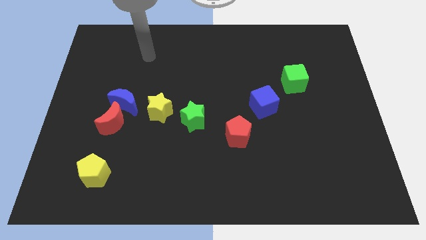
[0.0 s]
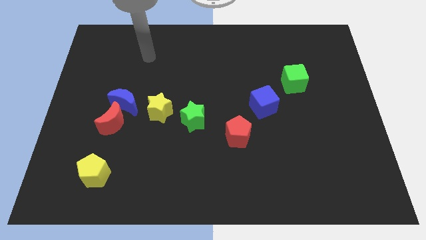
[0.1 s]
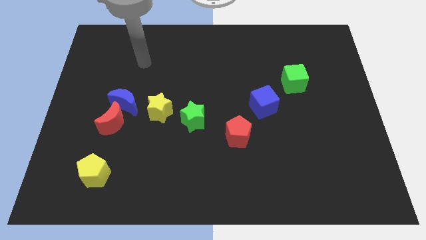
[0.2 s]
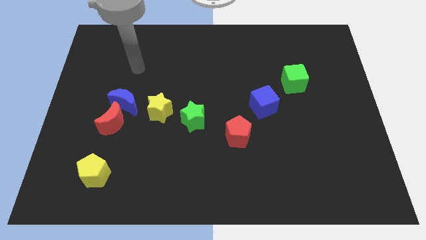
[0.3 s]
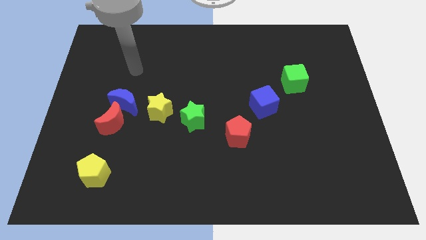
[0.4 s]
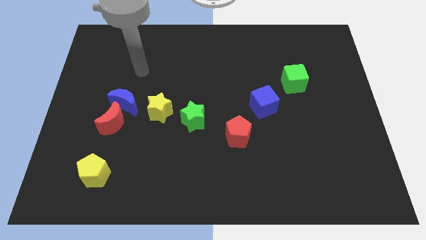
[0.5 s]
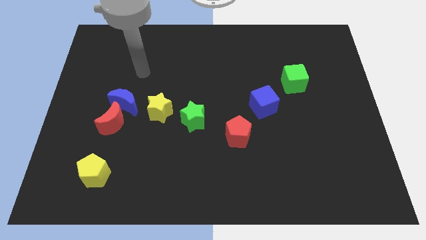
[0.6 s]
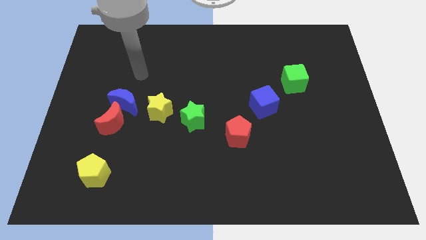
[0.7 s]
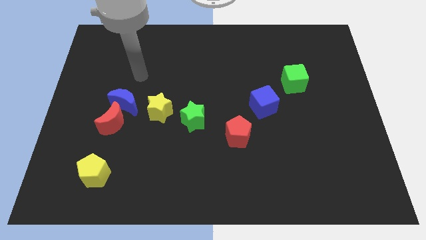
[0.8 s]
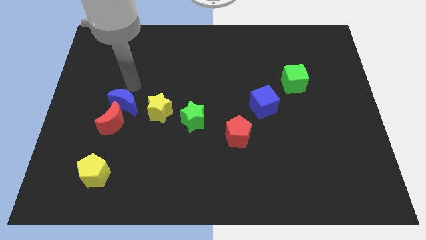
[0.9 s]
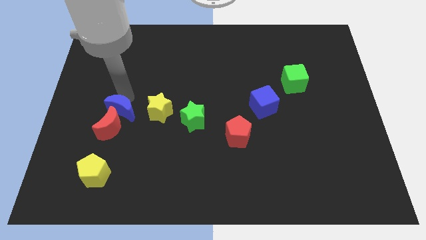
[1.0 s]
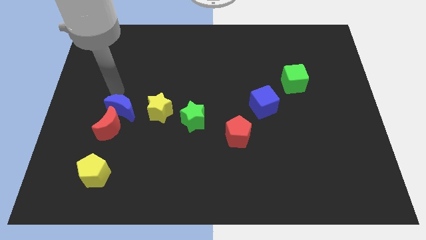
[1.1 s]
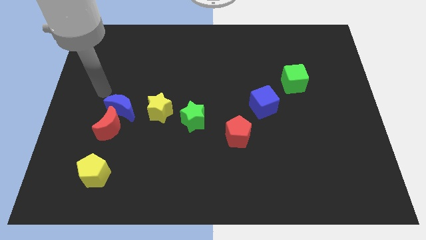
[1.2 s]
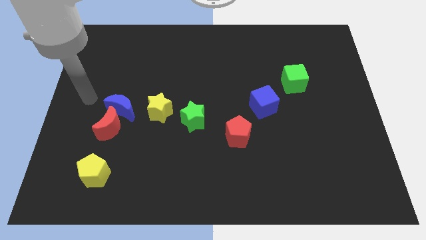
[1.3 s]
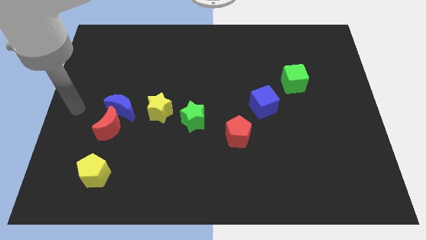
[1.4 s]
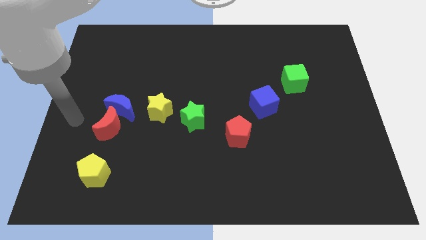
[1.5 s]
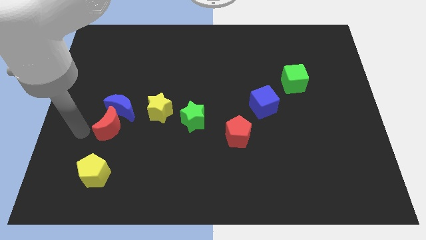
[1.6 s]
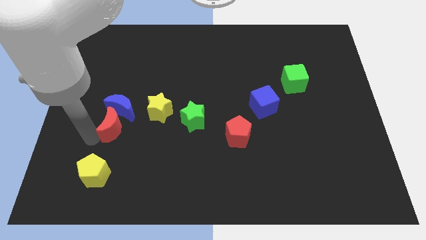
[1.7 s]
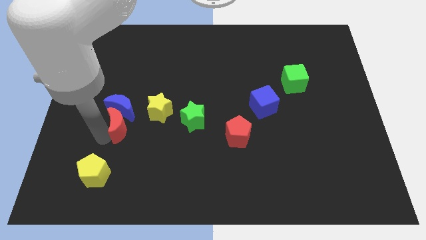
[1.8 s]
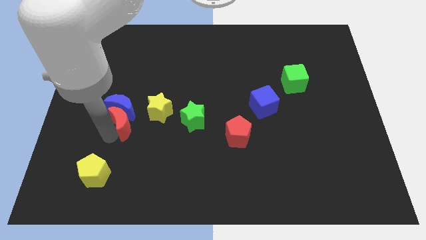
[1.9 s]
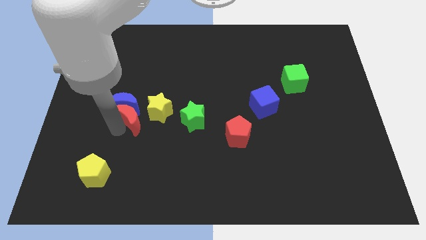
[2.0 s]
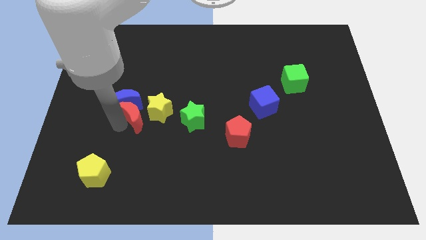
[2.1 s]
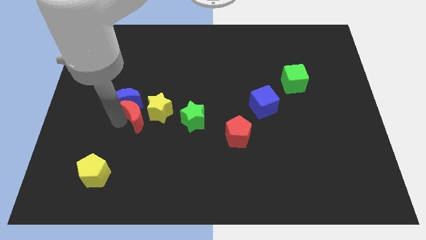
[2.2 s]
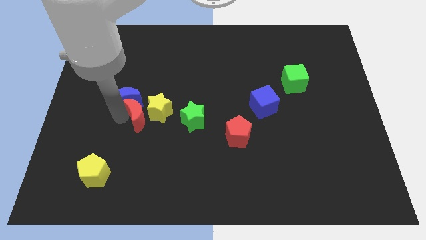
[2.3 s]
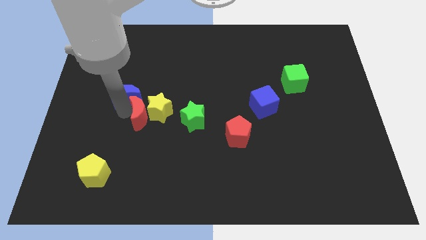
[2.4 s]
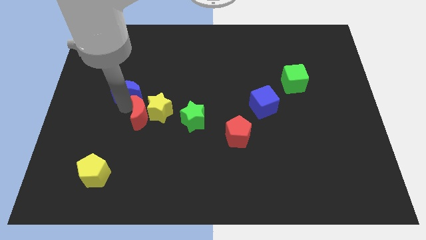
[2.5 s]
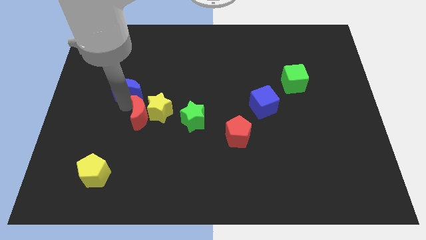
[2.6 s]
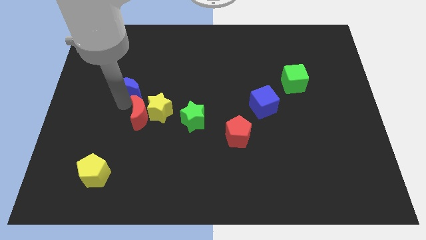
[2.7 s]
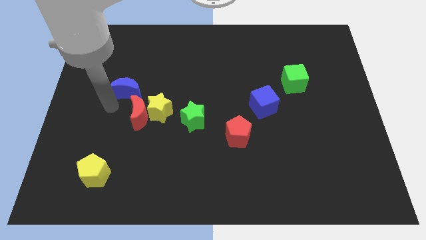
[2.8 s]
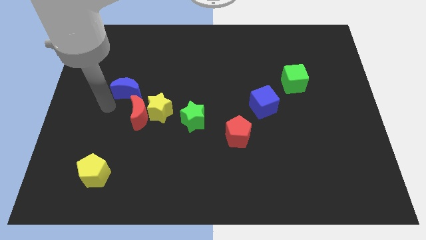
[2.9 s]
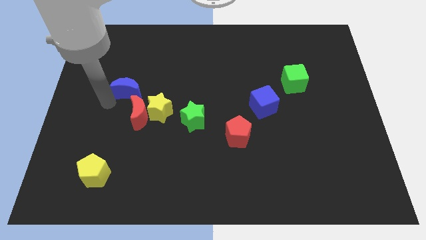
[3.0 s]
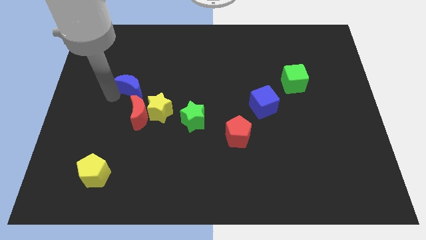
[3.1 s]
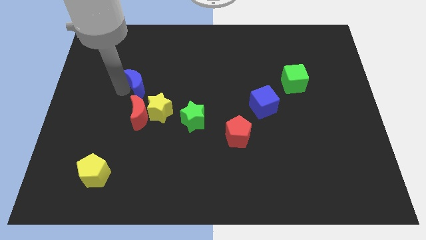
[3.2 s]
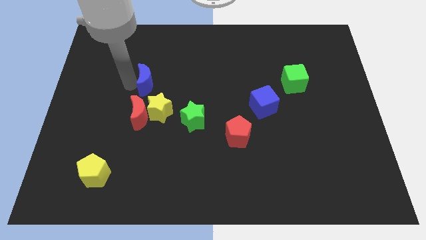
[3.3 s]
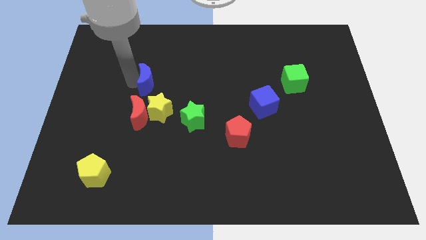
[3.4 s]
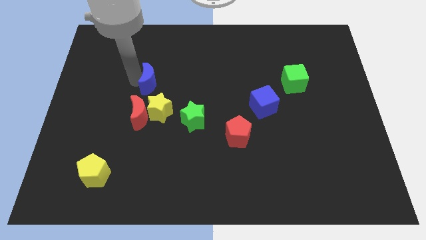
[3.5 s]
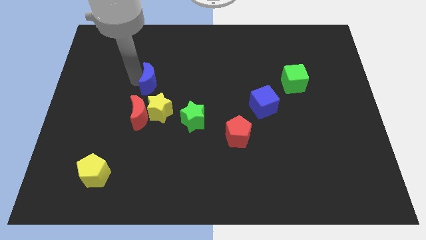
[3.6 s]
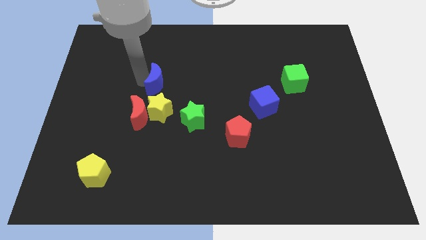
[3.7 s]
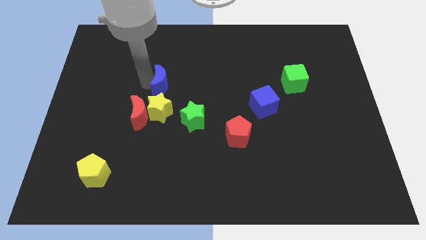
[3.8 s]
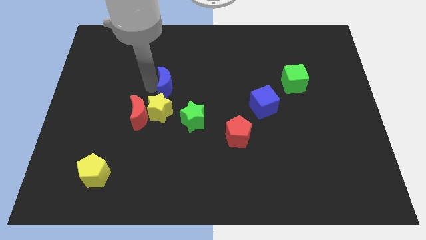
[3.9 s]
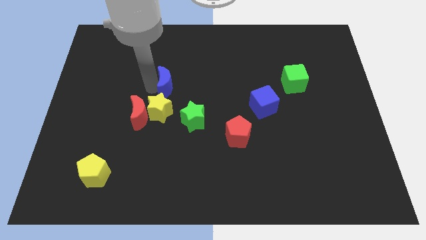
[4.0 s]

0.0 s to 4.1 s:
place blue moon to the top of yellow star

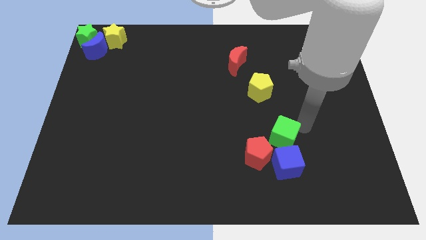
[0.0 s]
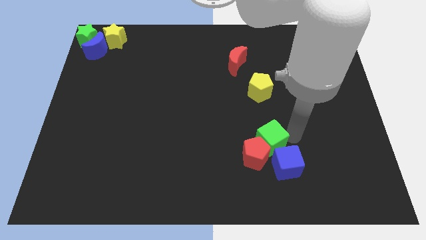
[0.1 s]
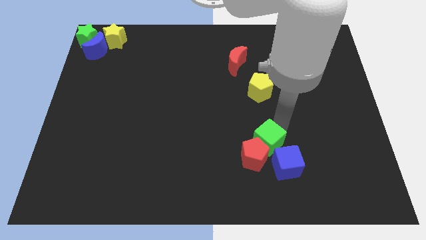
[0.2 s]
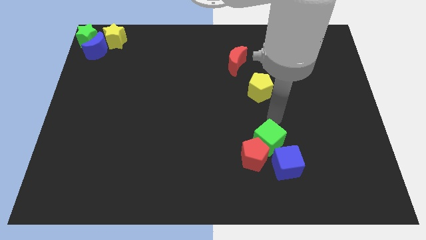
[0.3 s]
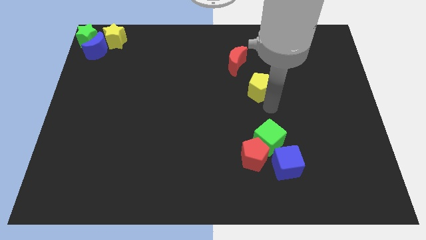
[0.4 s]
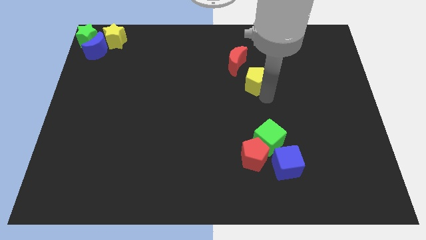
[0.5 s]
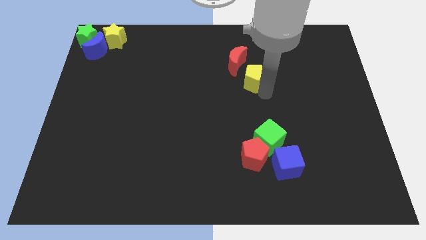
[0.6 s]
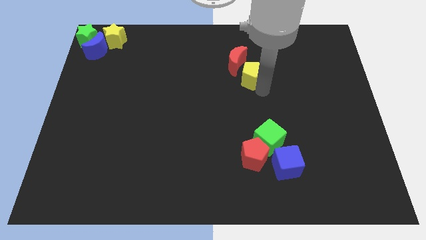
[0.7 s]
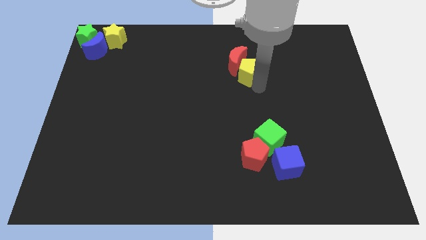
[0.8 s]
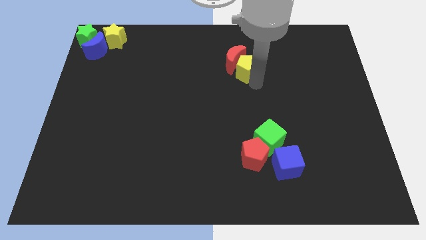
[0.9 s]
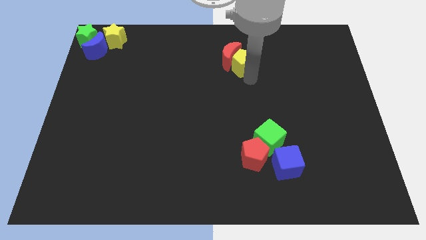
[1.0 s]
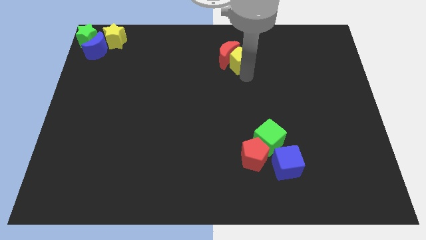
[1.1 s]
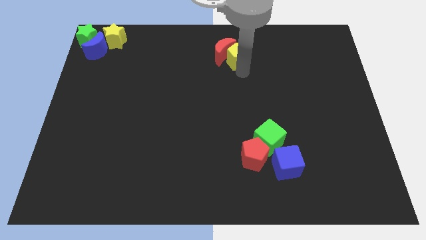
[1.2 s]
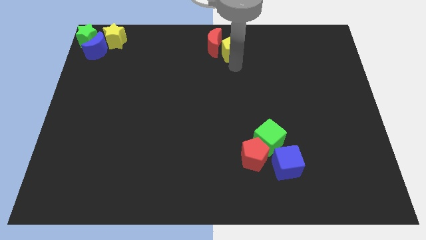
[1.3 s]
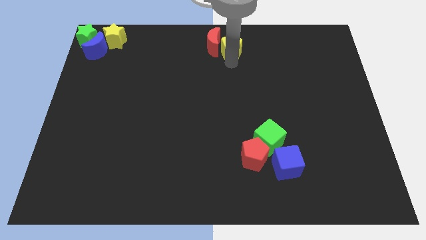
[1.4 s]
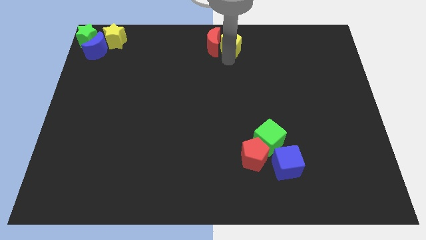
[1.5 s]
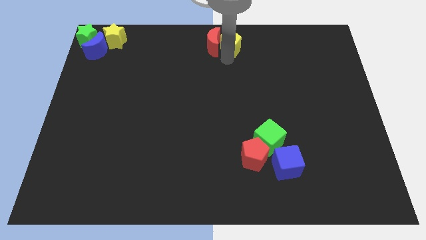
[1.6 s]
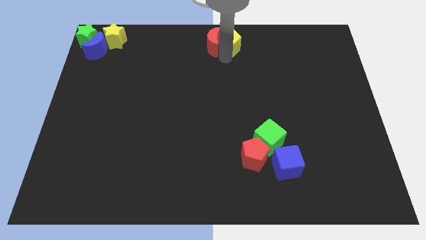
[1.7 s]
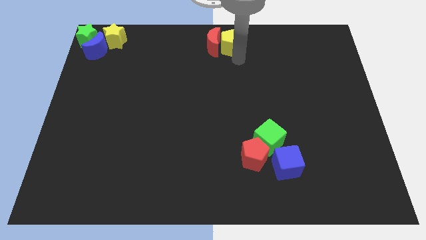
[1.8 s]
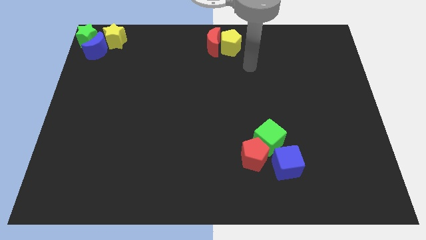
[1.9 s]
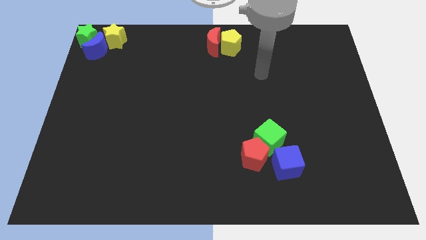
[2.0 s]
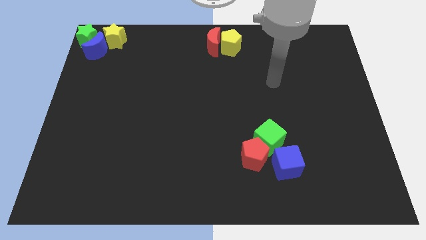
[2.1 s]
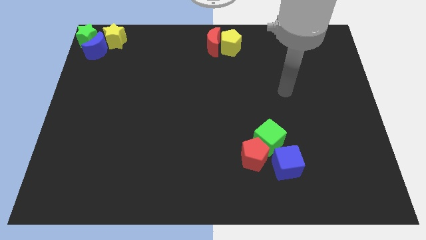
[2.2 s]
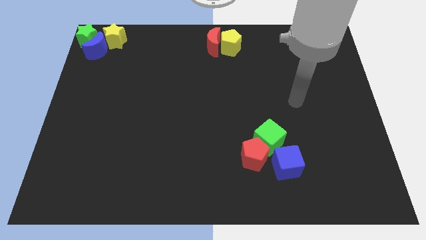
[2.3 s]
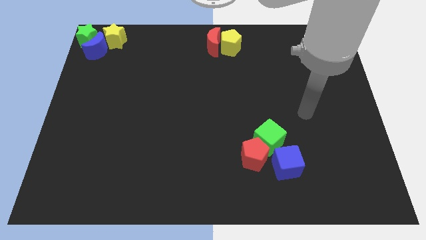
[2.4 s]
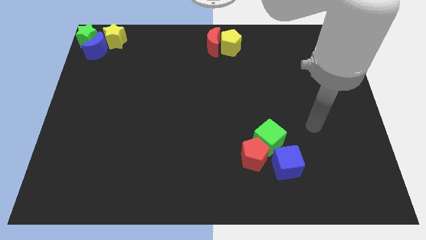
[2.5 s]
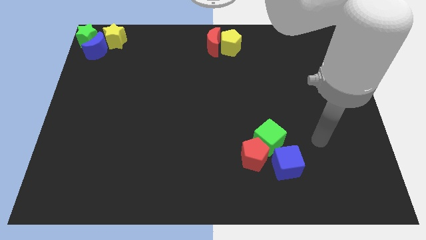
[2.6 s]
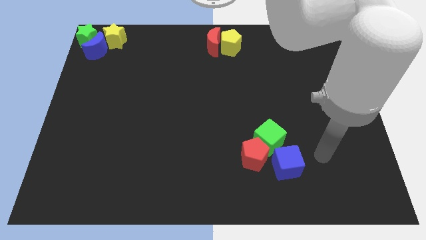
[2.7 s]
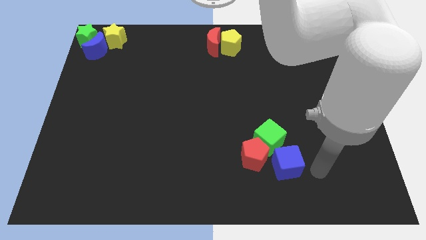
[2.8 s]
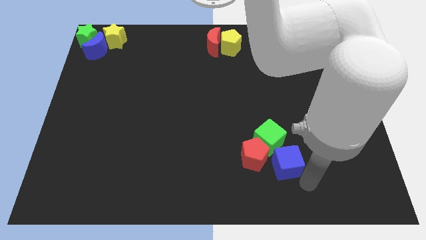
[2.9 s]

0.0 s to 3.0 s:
push the red moon with yellow pentagon towards top side of the board

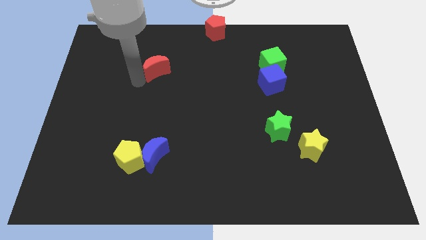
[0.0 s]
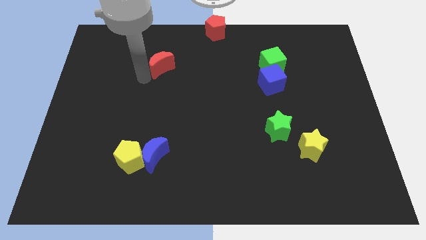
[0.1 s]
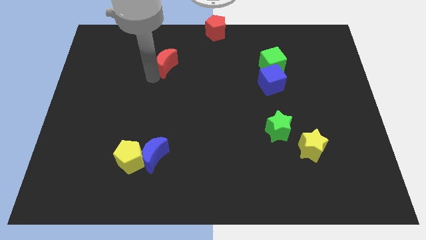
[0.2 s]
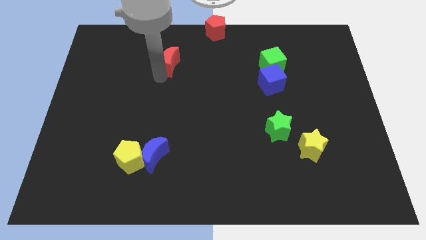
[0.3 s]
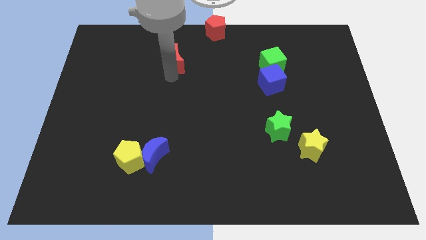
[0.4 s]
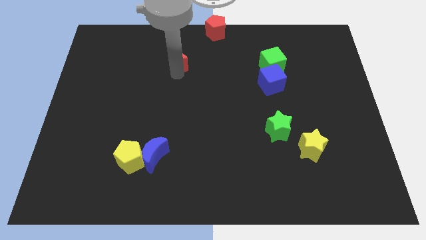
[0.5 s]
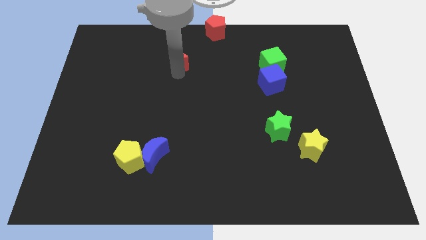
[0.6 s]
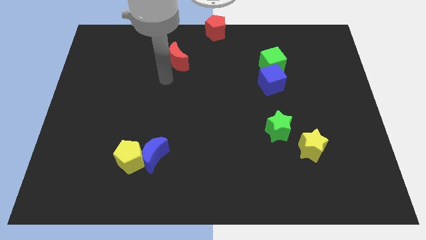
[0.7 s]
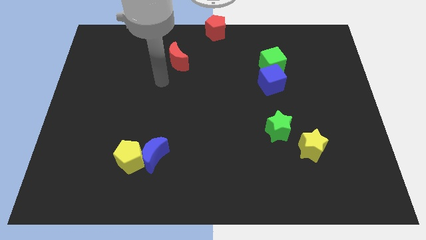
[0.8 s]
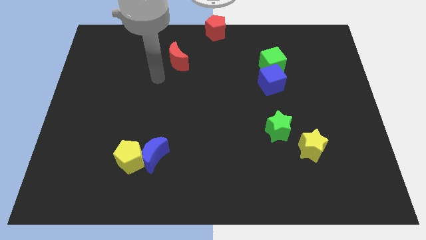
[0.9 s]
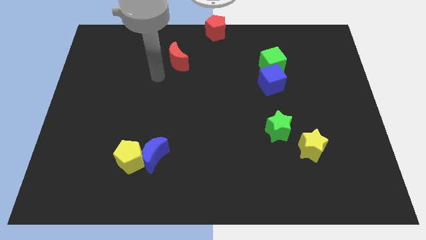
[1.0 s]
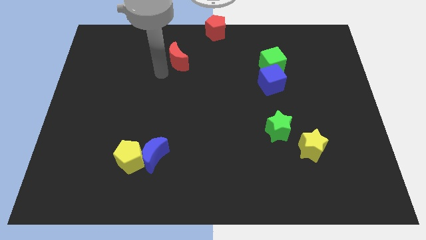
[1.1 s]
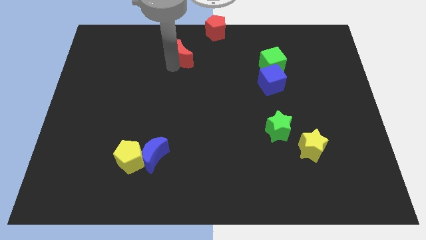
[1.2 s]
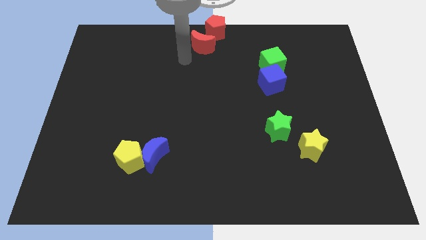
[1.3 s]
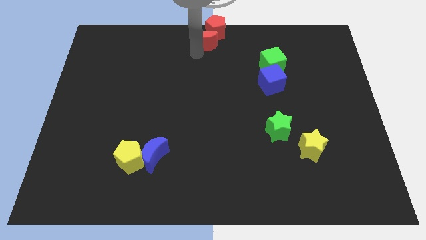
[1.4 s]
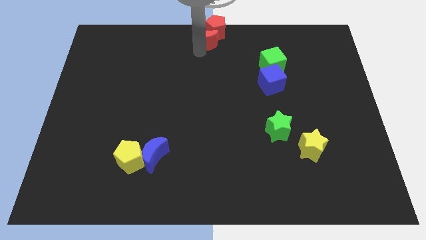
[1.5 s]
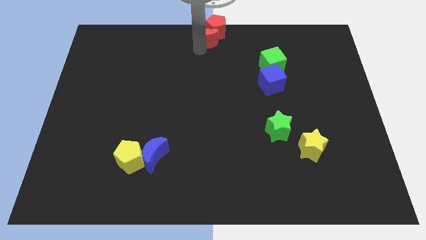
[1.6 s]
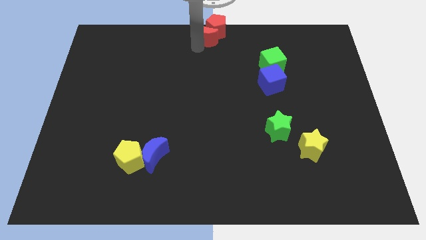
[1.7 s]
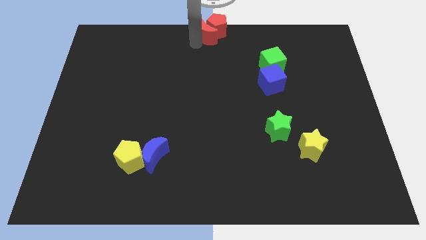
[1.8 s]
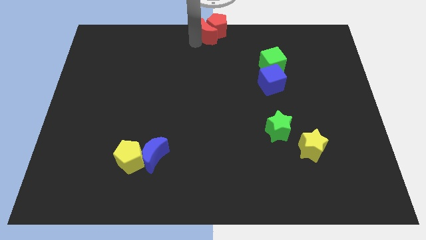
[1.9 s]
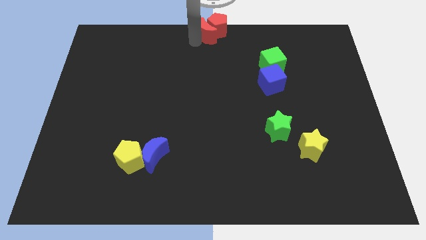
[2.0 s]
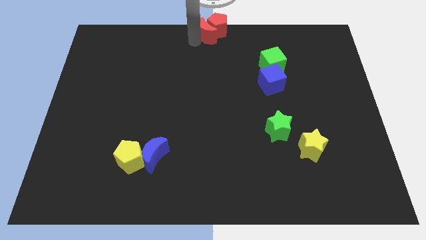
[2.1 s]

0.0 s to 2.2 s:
push the red moon into the red pentagon
